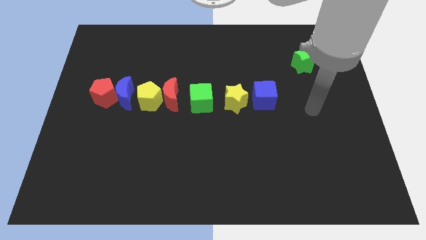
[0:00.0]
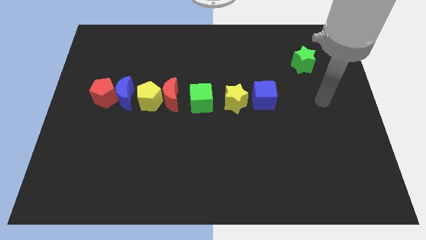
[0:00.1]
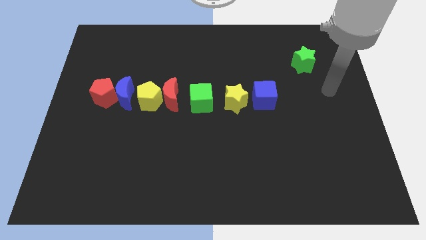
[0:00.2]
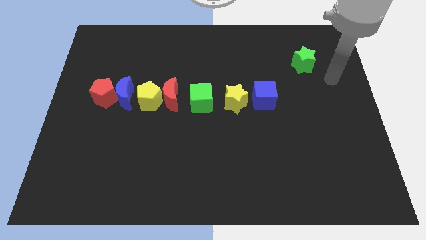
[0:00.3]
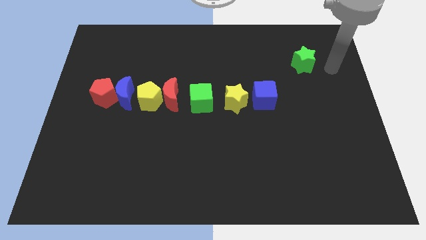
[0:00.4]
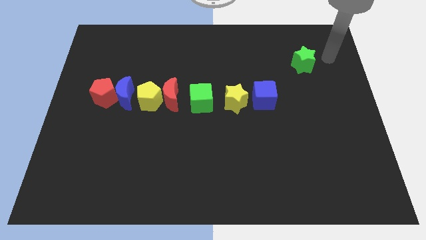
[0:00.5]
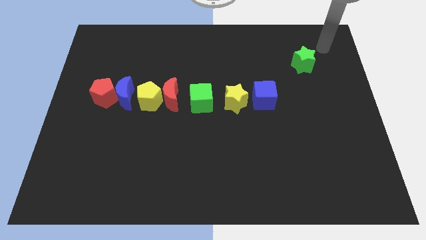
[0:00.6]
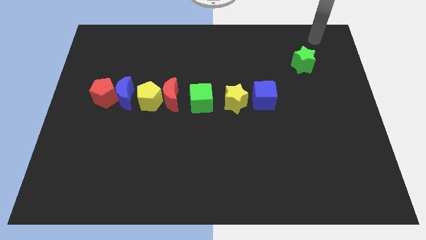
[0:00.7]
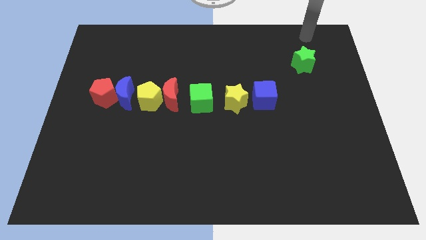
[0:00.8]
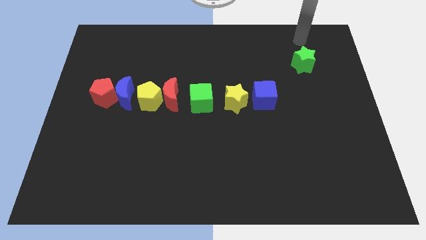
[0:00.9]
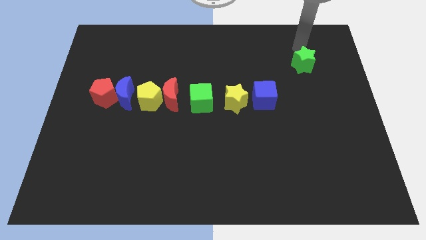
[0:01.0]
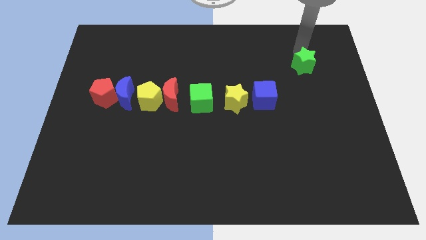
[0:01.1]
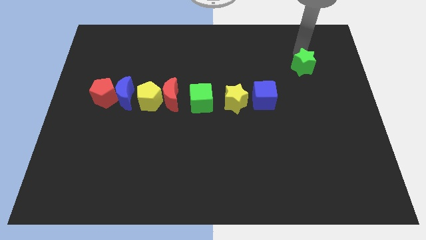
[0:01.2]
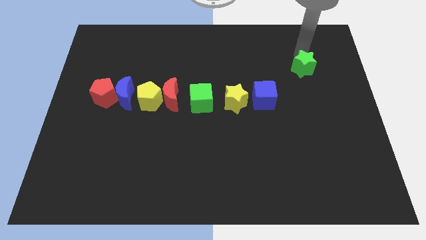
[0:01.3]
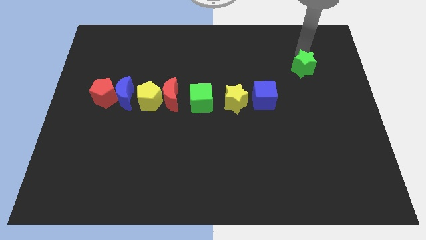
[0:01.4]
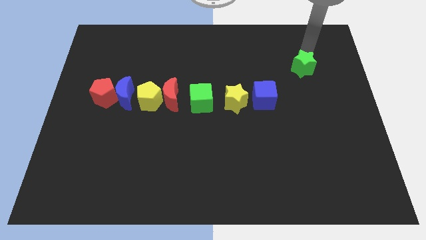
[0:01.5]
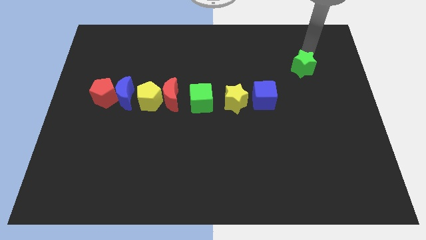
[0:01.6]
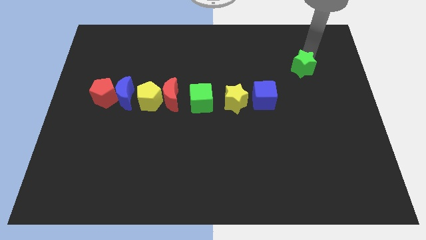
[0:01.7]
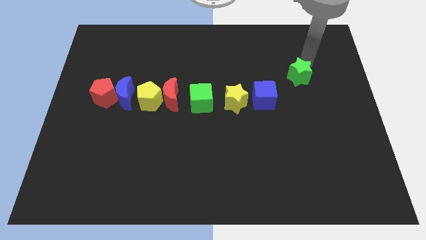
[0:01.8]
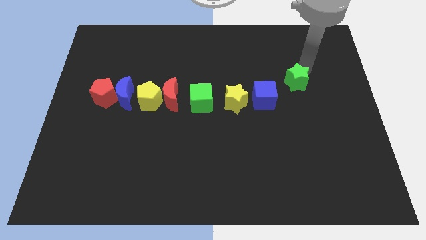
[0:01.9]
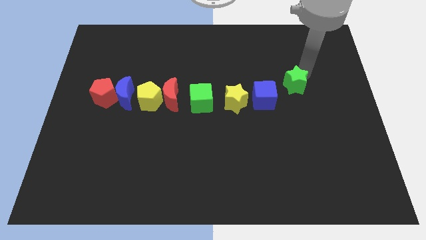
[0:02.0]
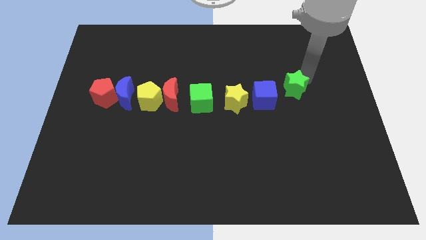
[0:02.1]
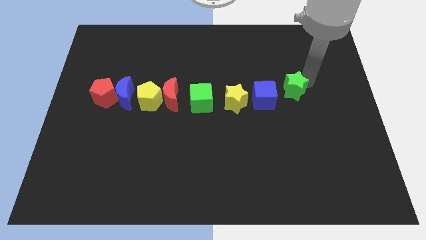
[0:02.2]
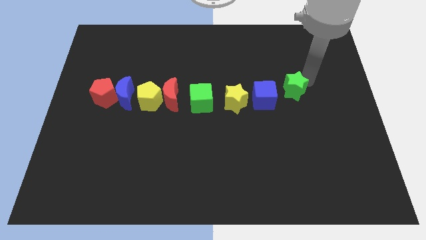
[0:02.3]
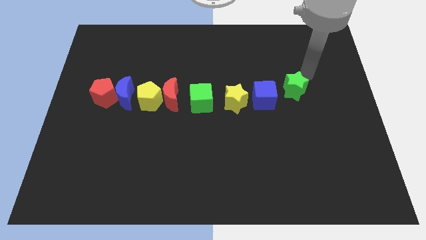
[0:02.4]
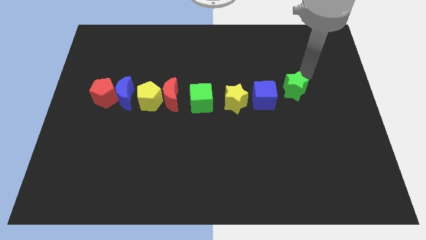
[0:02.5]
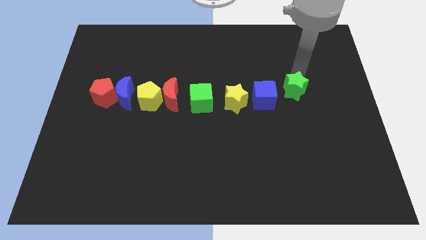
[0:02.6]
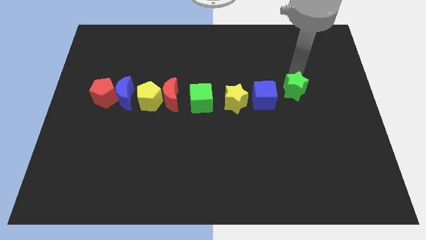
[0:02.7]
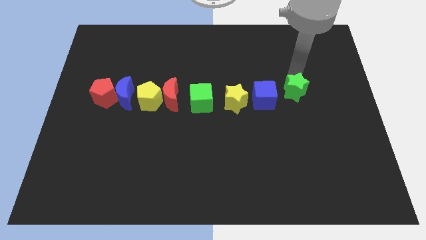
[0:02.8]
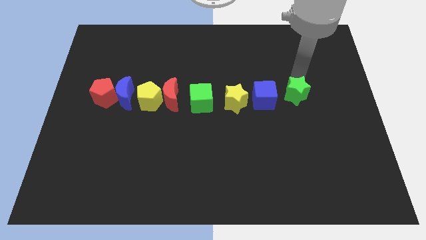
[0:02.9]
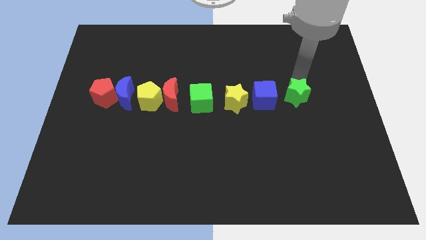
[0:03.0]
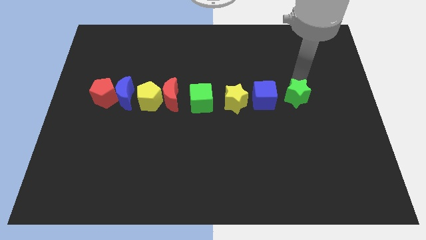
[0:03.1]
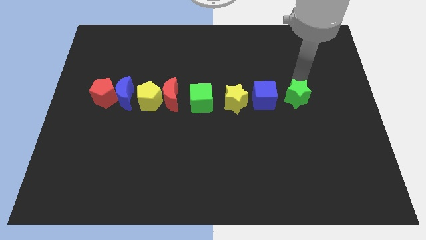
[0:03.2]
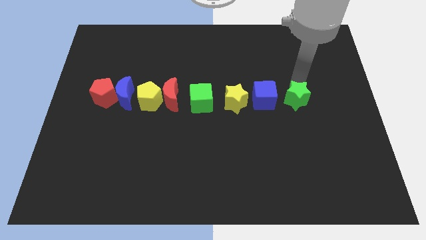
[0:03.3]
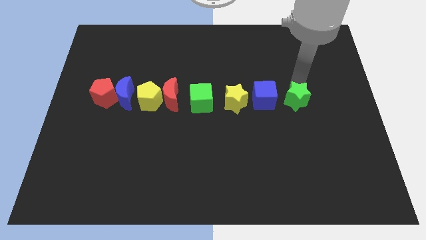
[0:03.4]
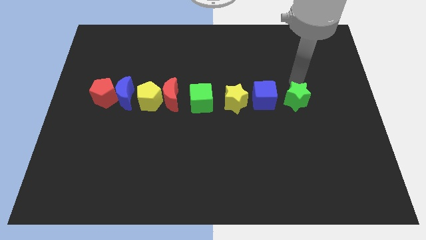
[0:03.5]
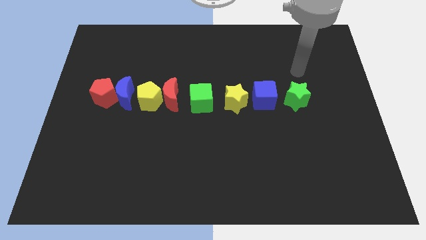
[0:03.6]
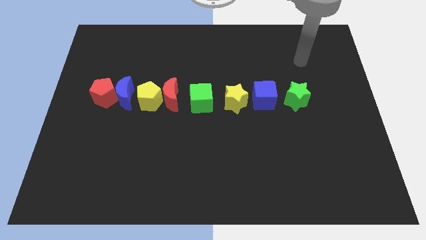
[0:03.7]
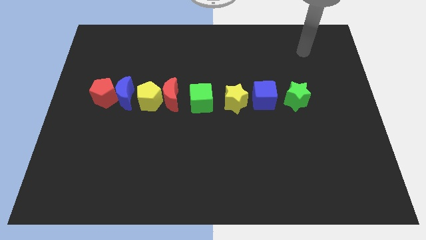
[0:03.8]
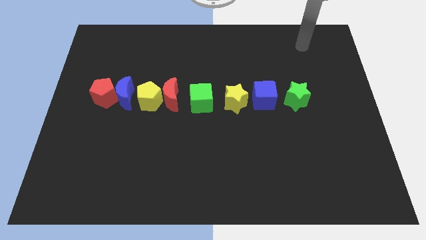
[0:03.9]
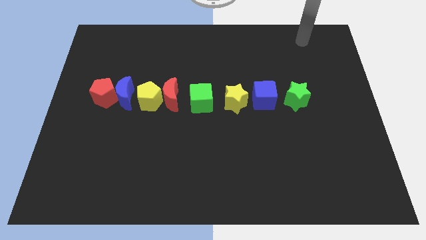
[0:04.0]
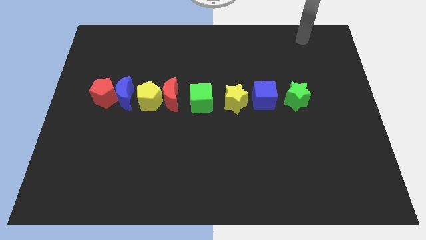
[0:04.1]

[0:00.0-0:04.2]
place the green star to the right side of blue cube

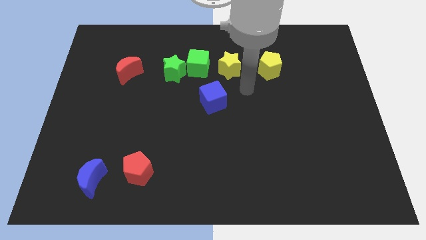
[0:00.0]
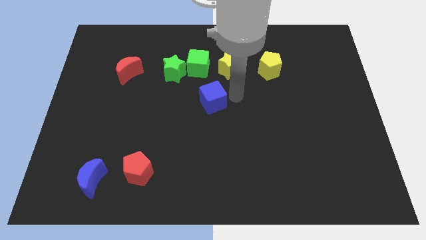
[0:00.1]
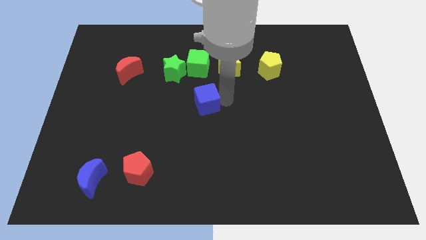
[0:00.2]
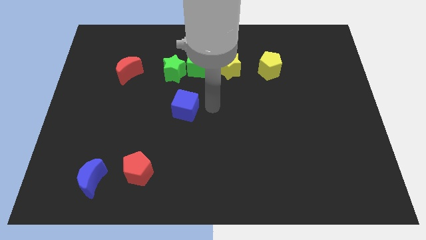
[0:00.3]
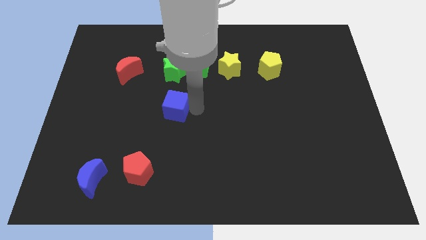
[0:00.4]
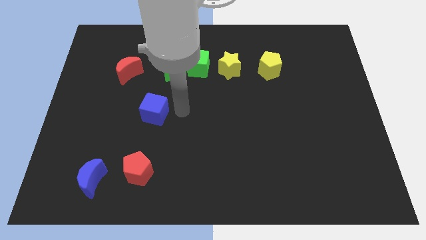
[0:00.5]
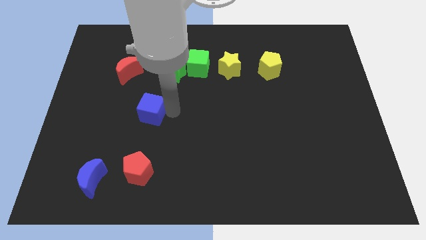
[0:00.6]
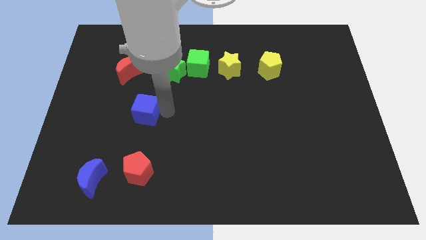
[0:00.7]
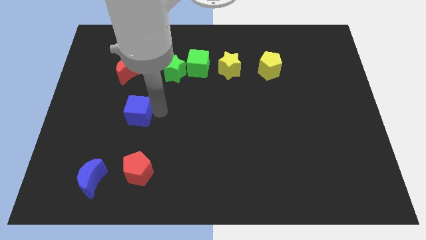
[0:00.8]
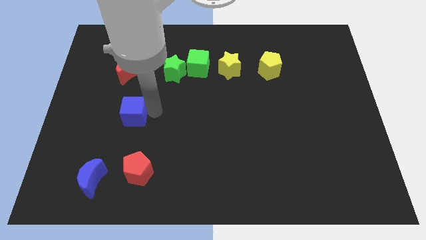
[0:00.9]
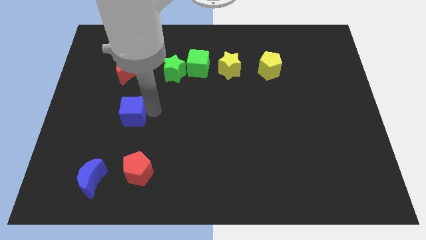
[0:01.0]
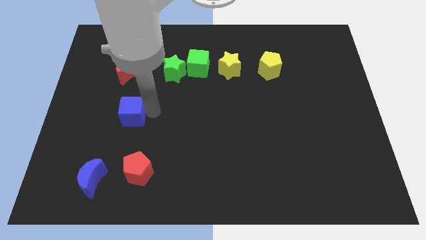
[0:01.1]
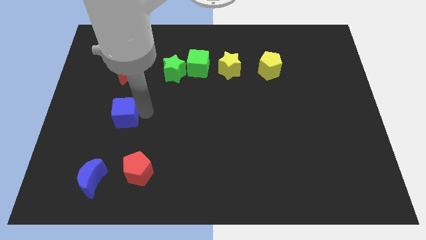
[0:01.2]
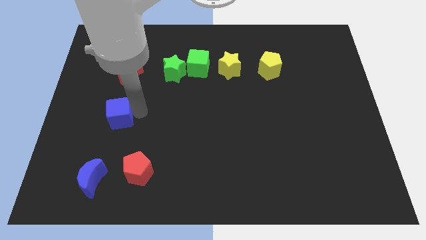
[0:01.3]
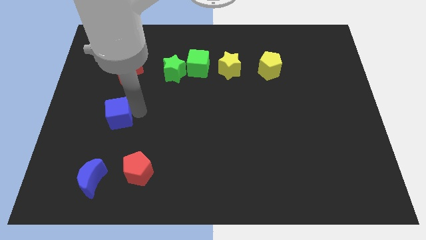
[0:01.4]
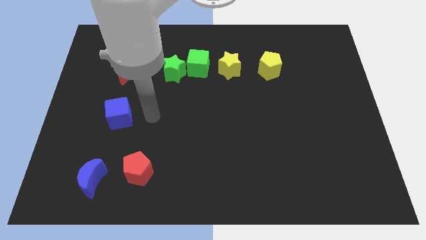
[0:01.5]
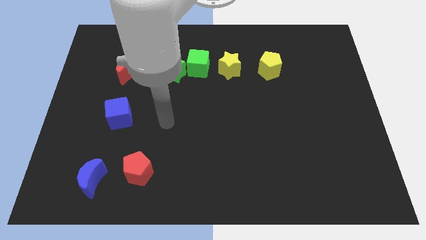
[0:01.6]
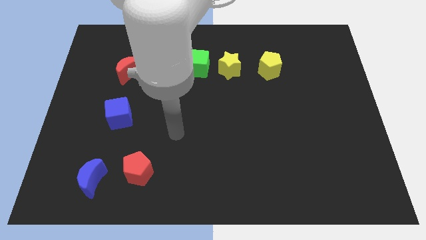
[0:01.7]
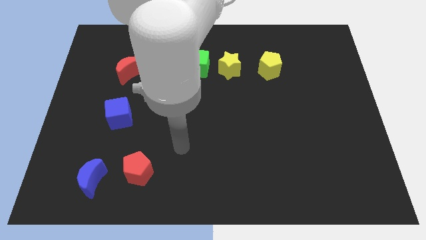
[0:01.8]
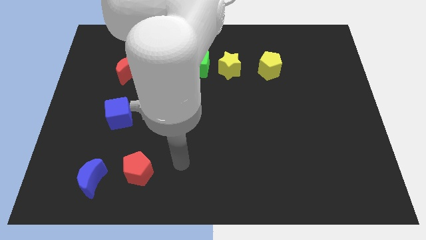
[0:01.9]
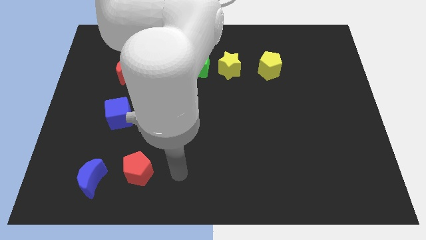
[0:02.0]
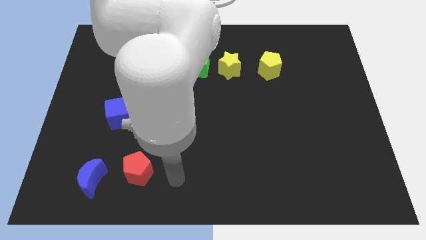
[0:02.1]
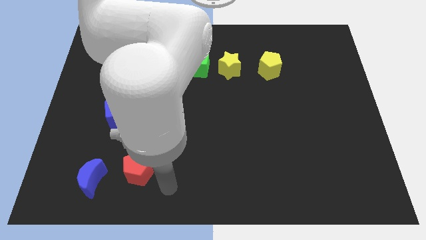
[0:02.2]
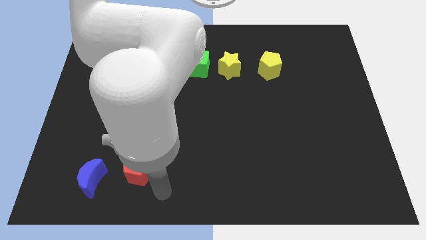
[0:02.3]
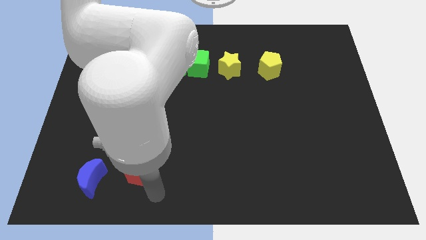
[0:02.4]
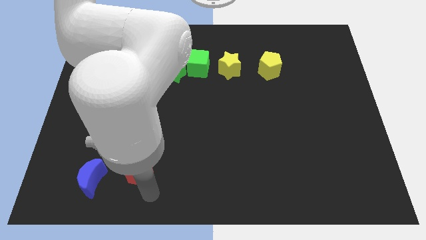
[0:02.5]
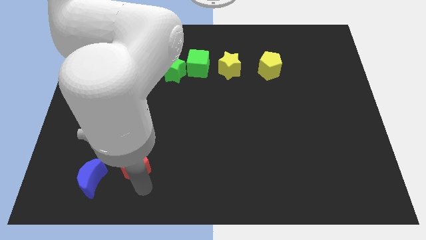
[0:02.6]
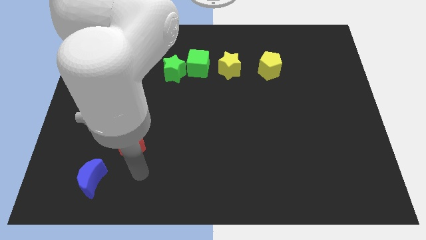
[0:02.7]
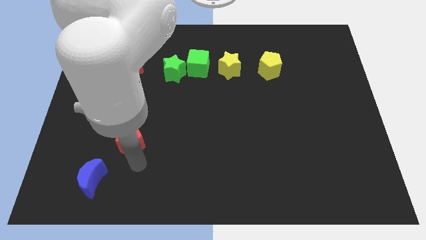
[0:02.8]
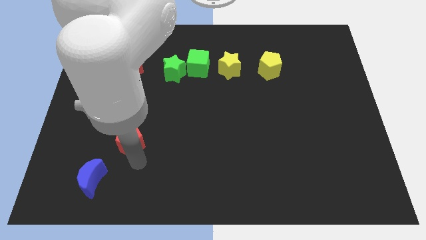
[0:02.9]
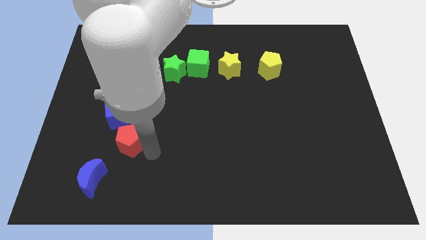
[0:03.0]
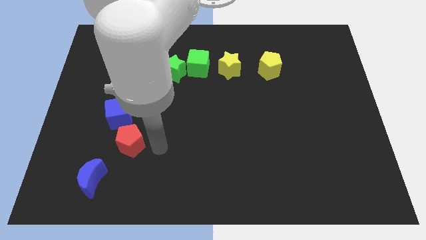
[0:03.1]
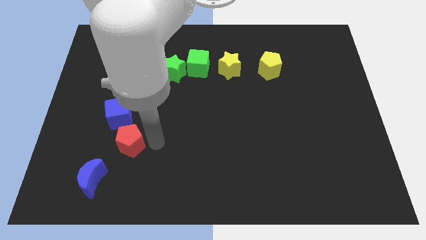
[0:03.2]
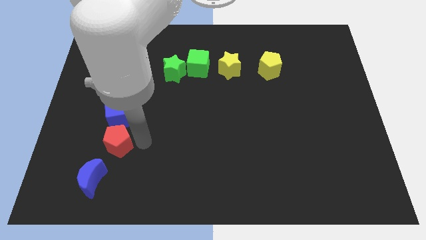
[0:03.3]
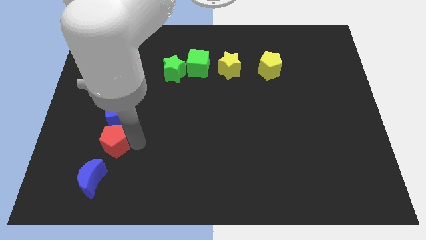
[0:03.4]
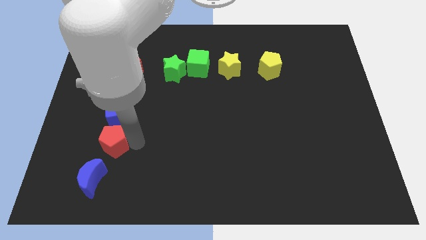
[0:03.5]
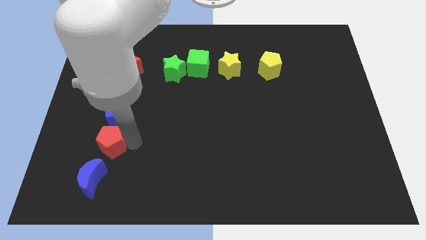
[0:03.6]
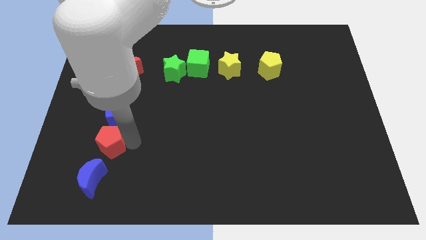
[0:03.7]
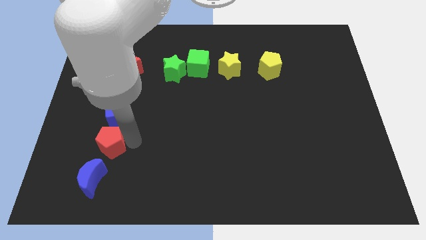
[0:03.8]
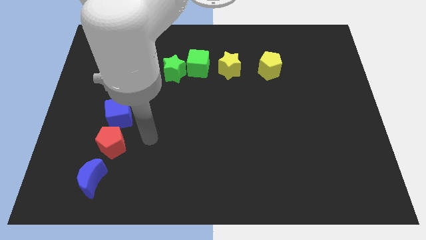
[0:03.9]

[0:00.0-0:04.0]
push blue cube and red pentagon in between red moon and blue crescent

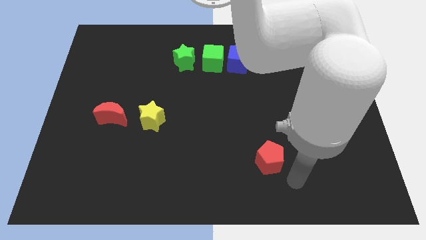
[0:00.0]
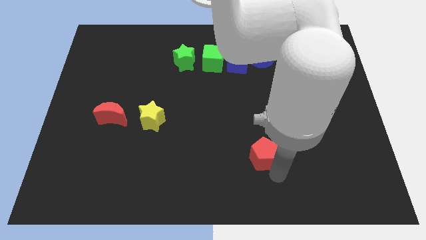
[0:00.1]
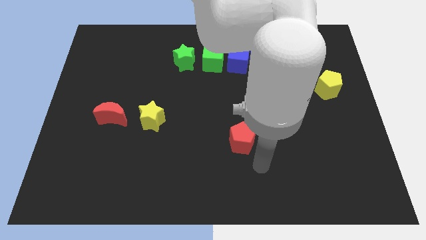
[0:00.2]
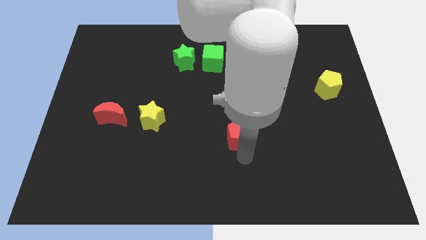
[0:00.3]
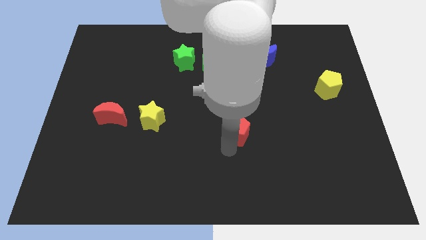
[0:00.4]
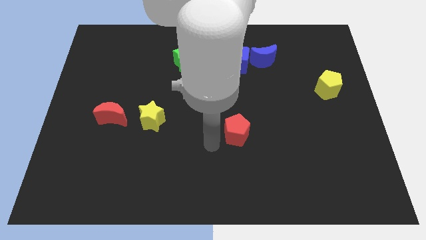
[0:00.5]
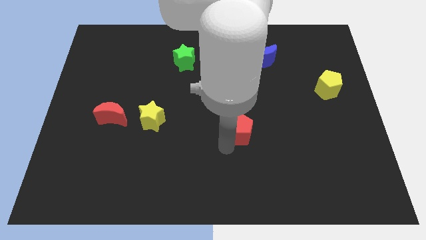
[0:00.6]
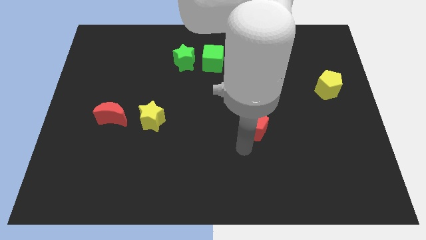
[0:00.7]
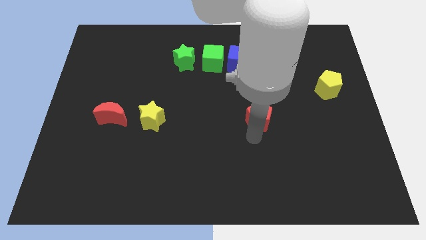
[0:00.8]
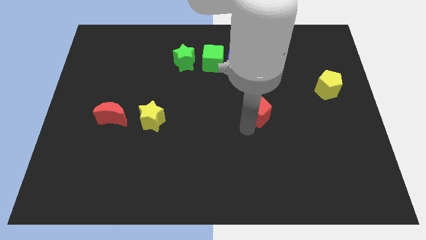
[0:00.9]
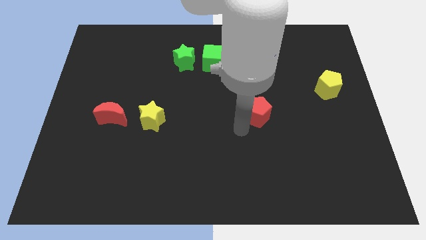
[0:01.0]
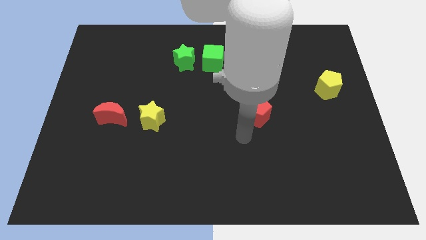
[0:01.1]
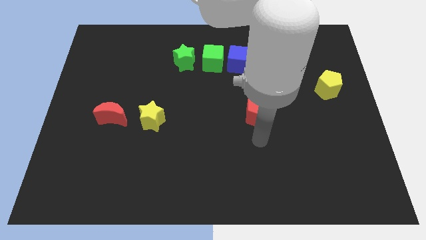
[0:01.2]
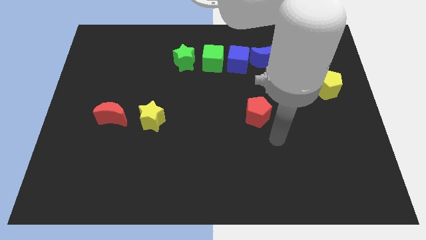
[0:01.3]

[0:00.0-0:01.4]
move the red pentagon at the bottom side of the blue blocks
